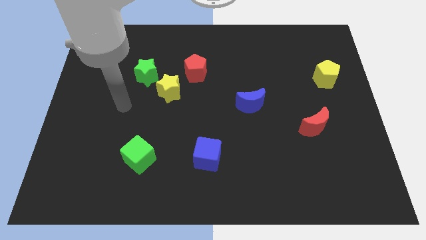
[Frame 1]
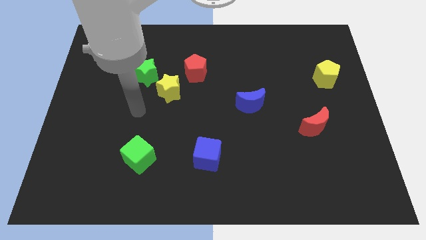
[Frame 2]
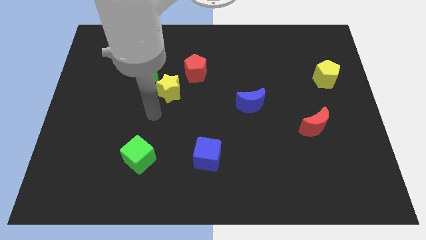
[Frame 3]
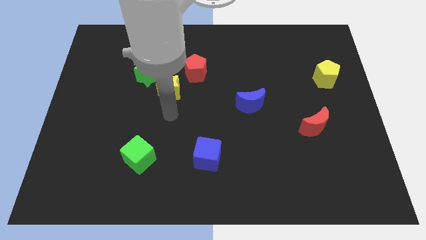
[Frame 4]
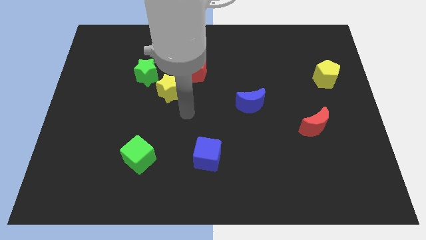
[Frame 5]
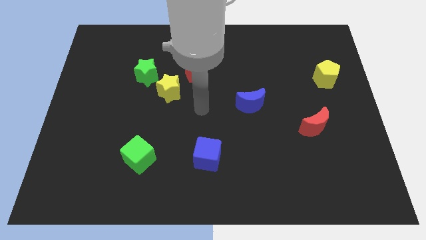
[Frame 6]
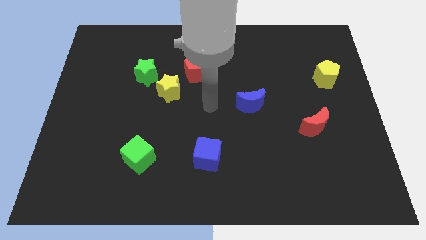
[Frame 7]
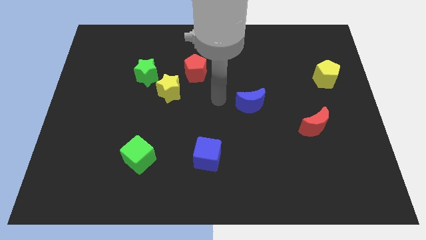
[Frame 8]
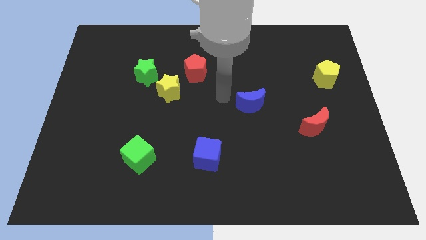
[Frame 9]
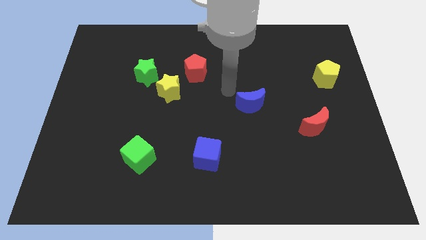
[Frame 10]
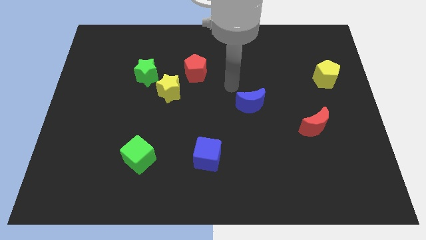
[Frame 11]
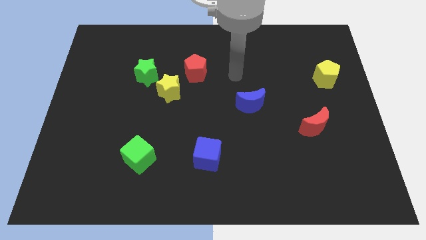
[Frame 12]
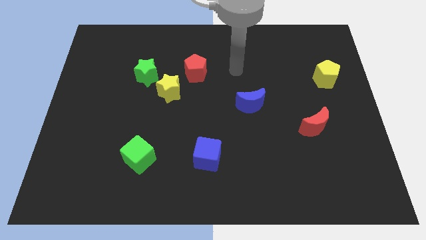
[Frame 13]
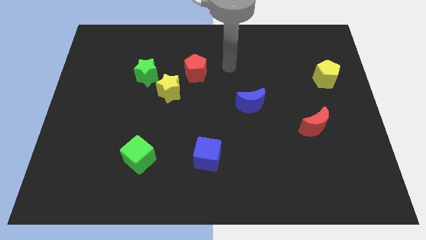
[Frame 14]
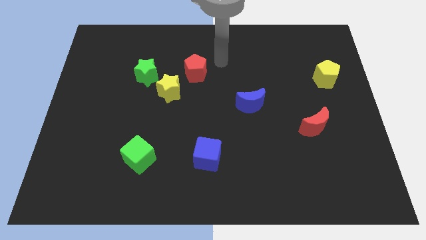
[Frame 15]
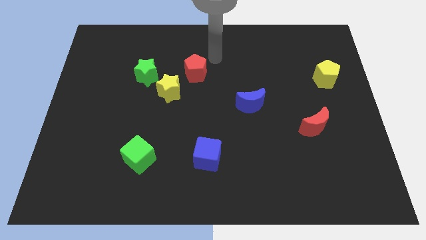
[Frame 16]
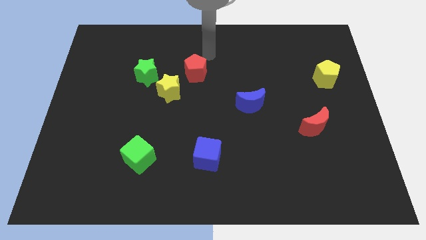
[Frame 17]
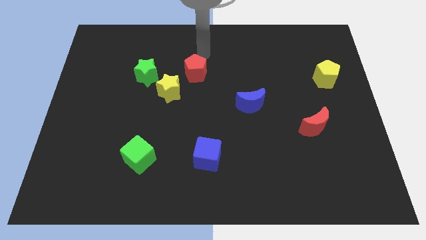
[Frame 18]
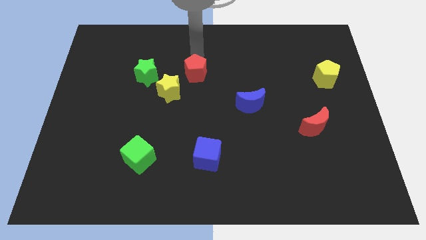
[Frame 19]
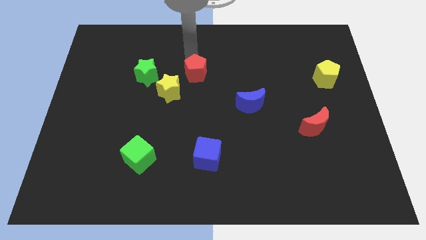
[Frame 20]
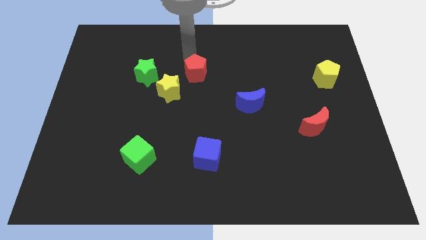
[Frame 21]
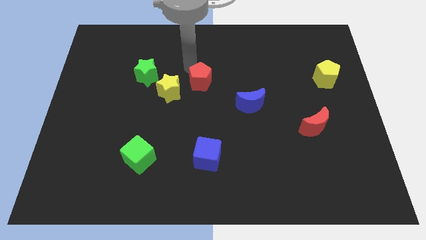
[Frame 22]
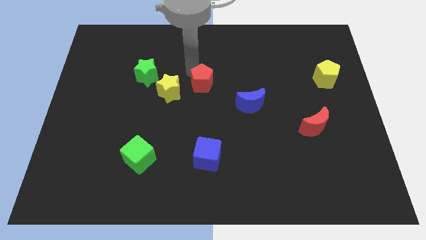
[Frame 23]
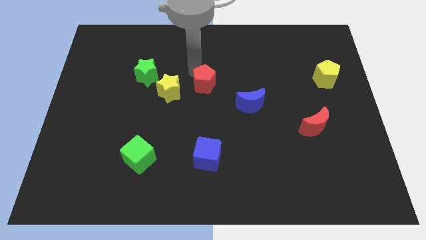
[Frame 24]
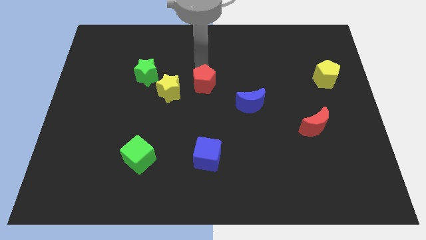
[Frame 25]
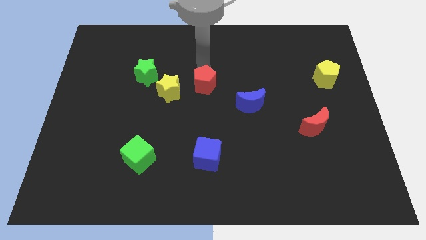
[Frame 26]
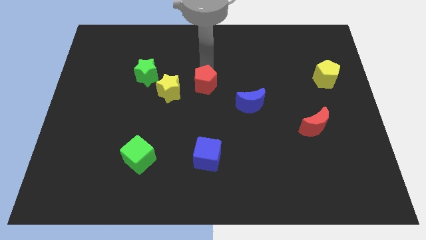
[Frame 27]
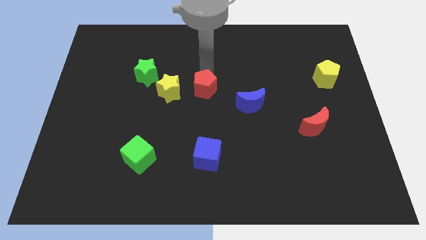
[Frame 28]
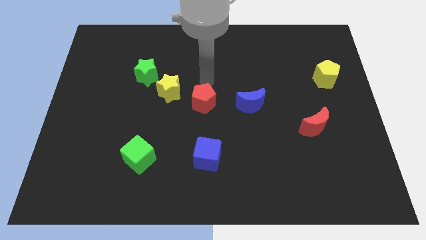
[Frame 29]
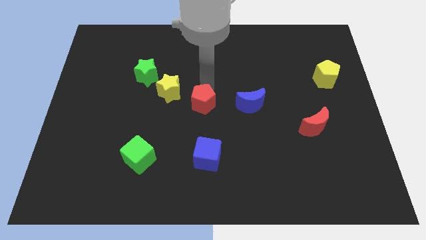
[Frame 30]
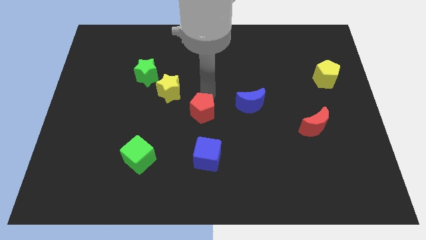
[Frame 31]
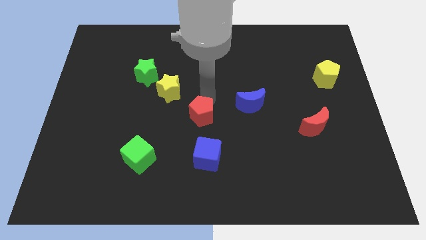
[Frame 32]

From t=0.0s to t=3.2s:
place the red pentagon towards the centre of the board

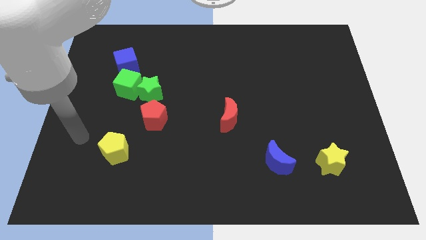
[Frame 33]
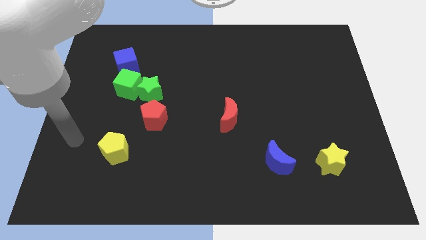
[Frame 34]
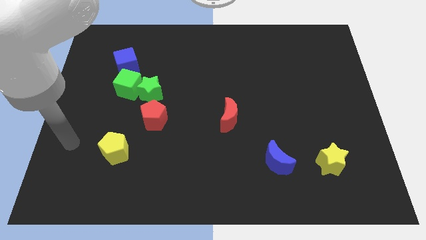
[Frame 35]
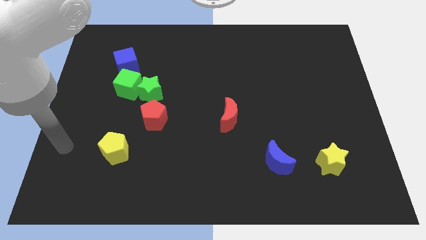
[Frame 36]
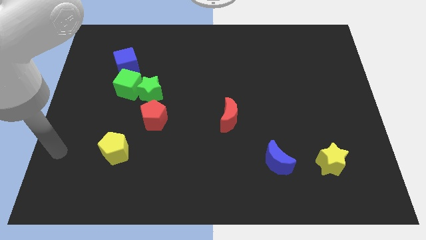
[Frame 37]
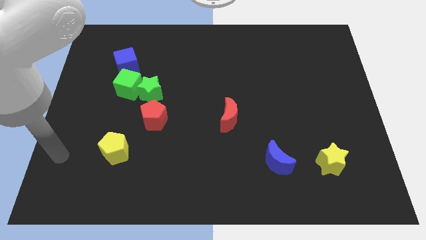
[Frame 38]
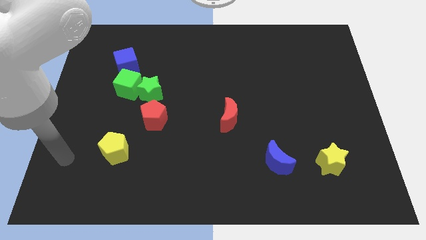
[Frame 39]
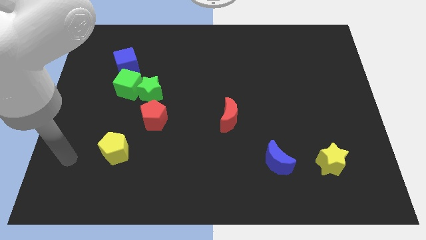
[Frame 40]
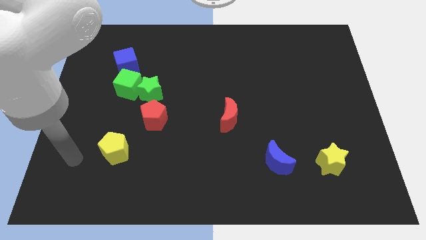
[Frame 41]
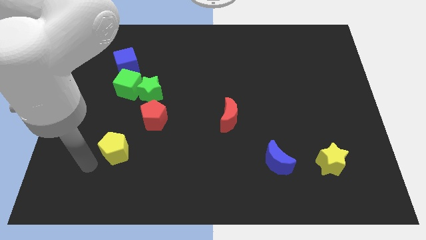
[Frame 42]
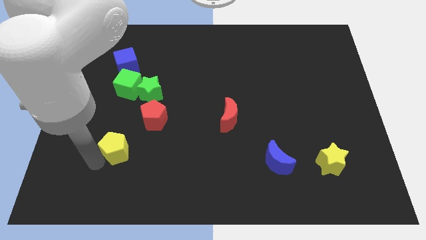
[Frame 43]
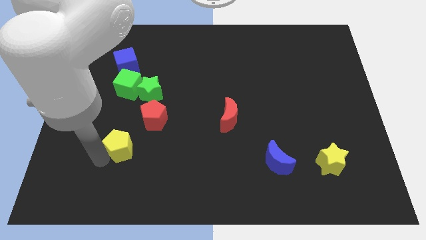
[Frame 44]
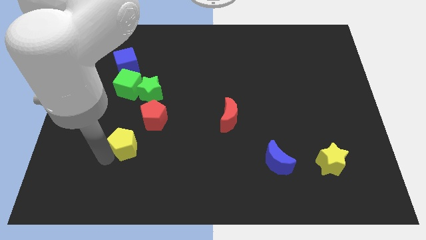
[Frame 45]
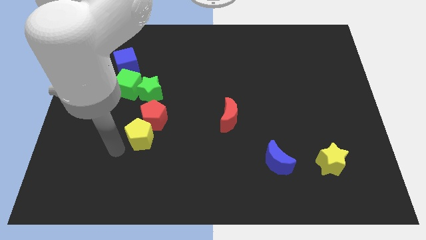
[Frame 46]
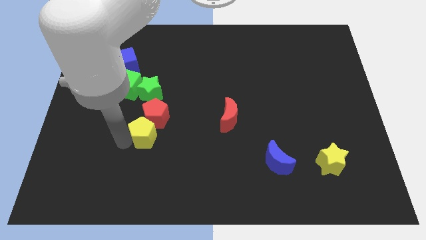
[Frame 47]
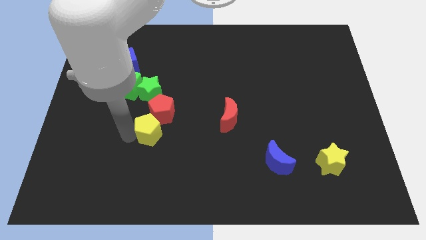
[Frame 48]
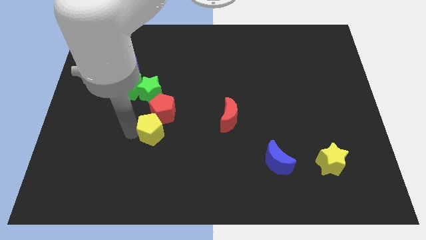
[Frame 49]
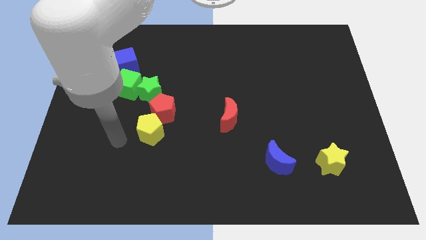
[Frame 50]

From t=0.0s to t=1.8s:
push the pentagon into the red pentagon

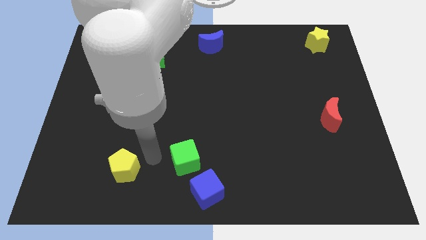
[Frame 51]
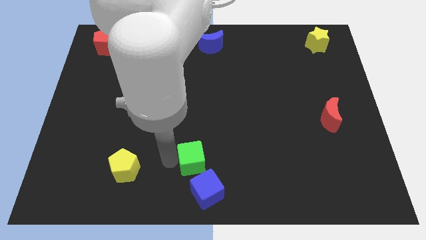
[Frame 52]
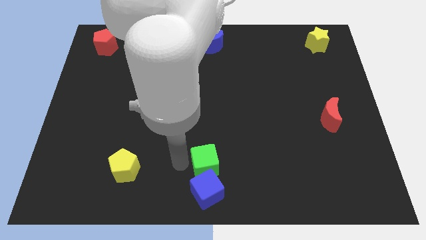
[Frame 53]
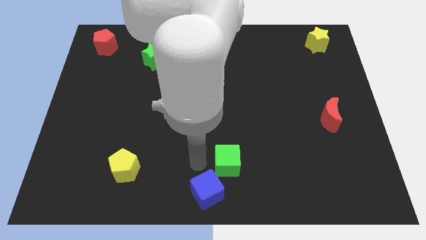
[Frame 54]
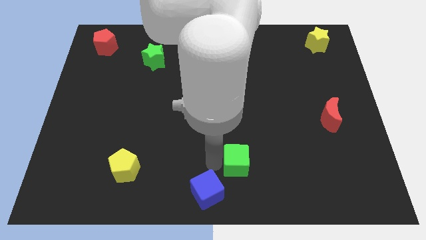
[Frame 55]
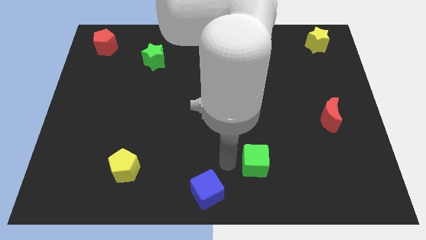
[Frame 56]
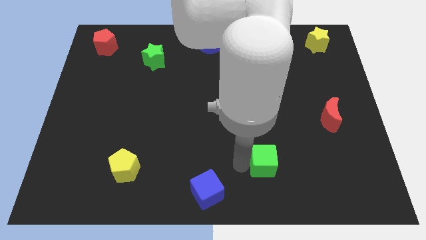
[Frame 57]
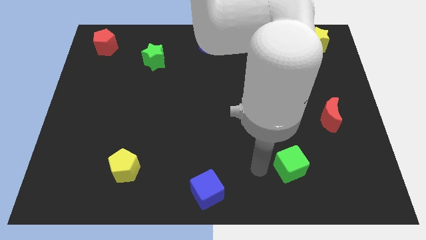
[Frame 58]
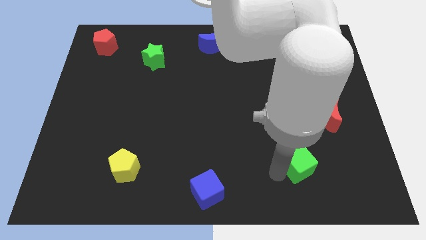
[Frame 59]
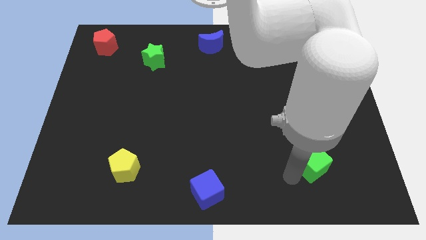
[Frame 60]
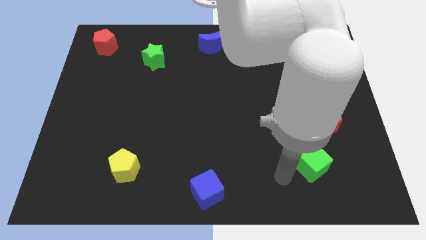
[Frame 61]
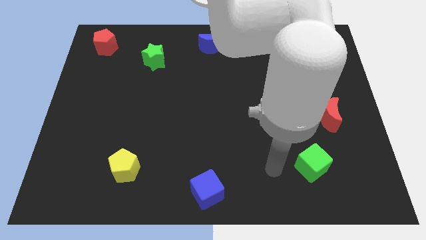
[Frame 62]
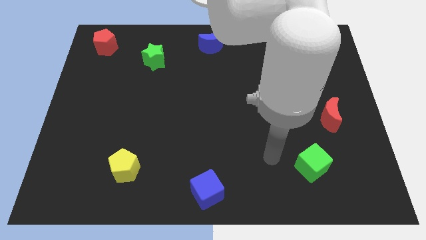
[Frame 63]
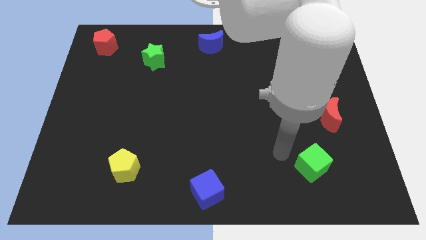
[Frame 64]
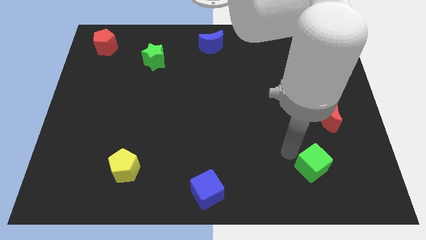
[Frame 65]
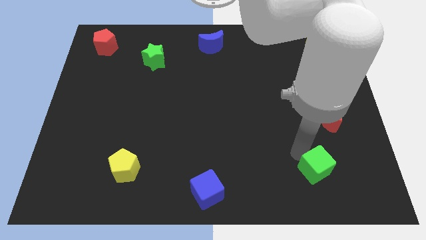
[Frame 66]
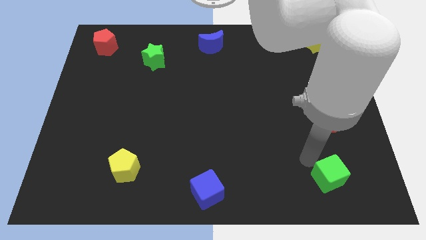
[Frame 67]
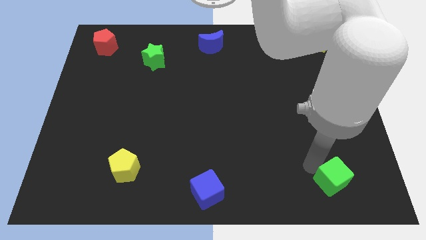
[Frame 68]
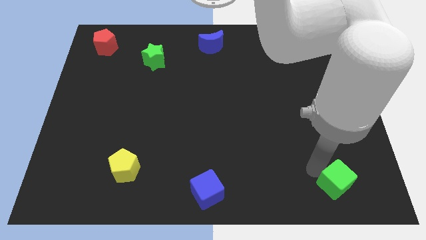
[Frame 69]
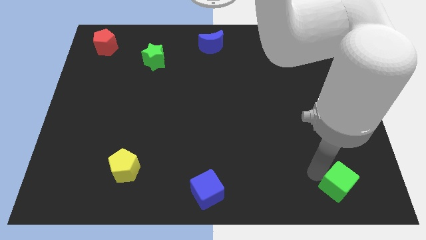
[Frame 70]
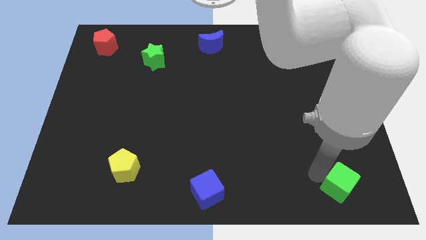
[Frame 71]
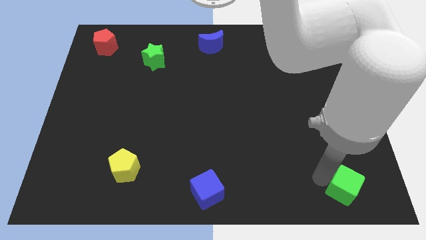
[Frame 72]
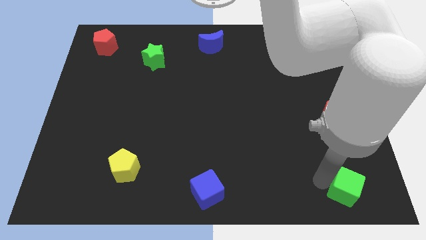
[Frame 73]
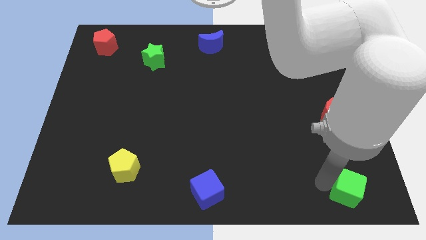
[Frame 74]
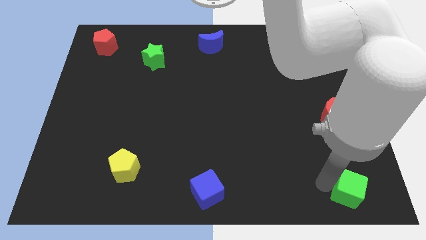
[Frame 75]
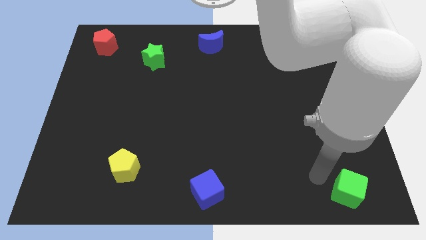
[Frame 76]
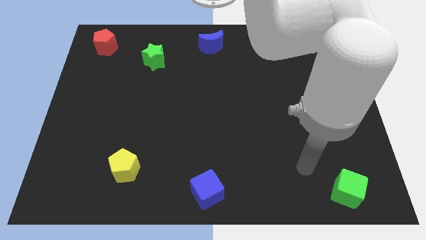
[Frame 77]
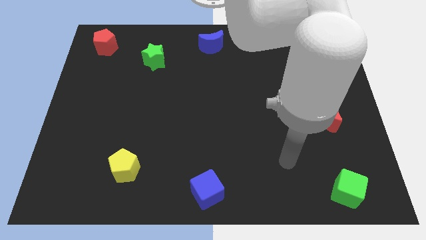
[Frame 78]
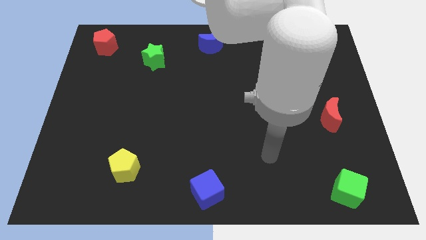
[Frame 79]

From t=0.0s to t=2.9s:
move the green cube to the bottom of the red crescent

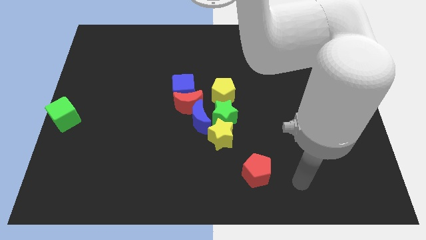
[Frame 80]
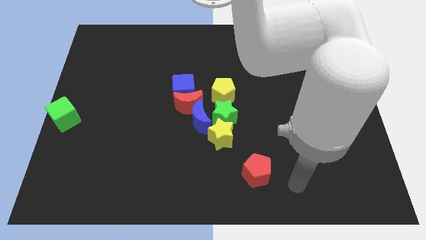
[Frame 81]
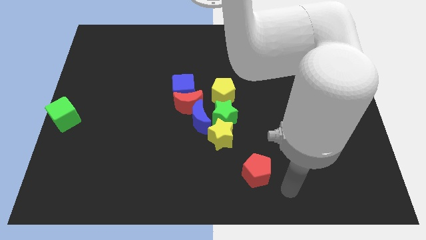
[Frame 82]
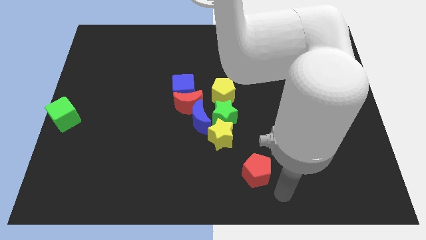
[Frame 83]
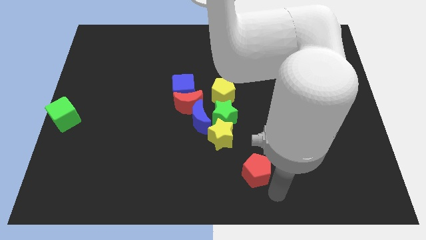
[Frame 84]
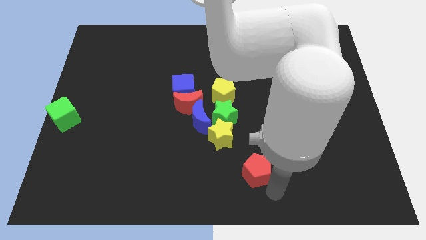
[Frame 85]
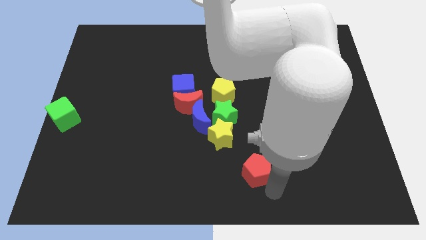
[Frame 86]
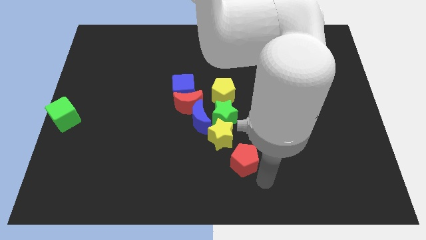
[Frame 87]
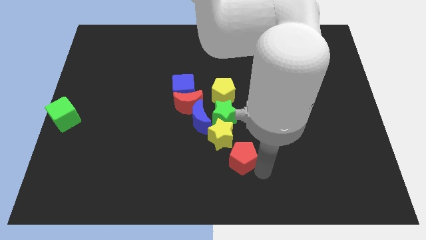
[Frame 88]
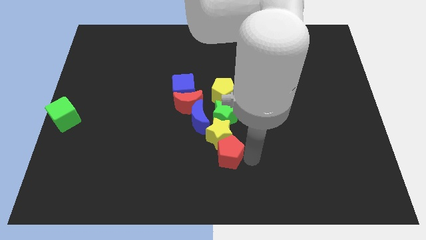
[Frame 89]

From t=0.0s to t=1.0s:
push the red pentagon into the bottom right side of the yellow star
